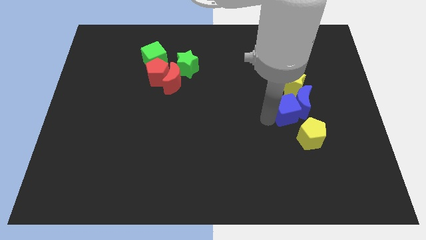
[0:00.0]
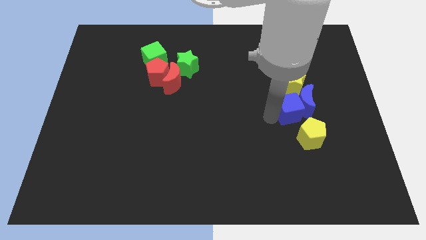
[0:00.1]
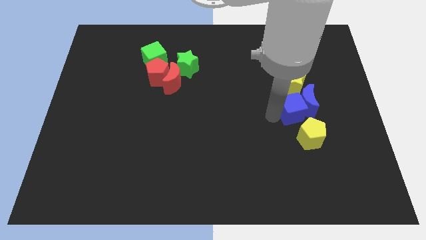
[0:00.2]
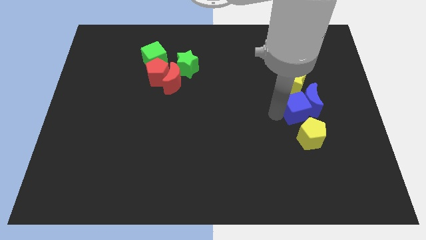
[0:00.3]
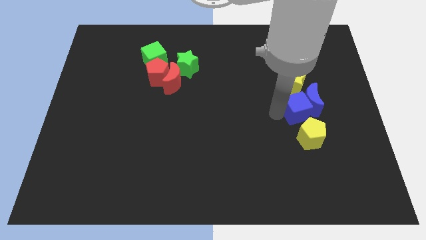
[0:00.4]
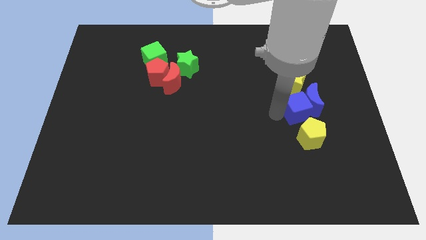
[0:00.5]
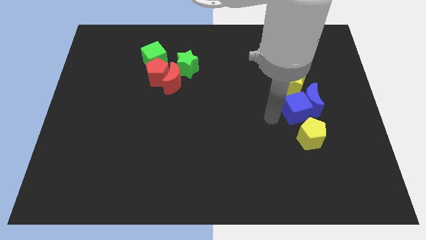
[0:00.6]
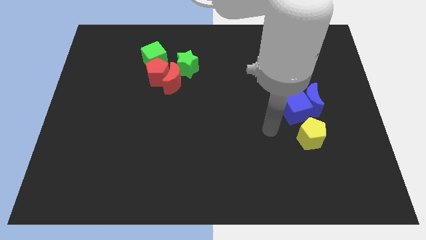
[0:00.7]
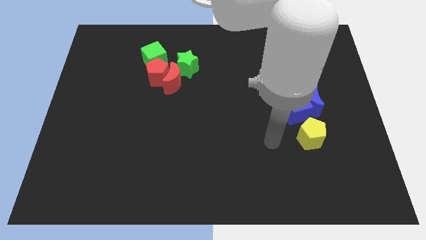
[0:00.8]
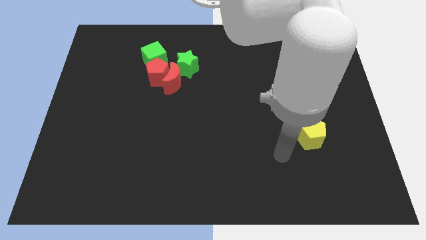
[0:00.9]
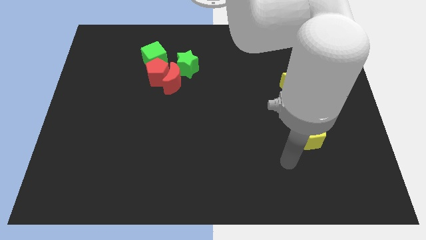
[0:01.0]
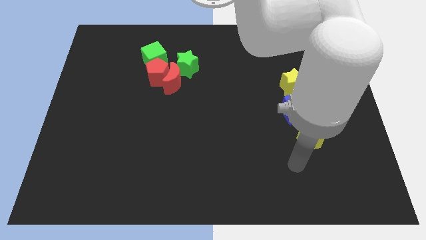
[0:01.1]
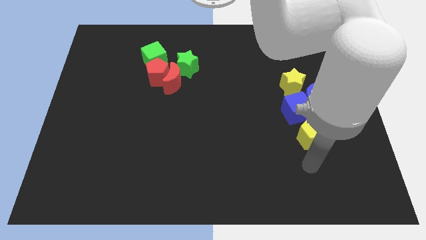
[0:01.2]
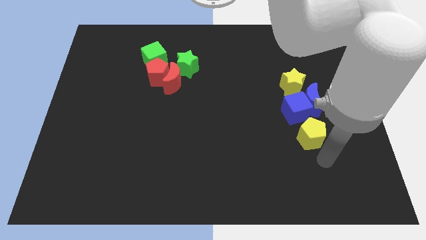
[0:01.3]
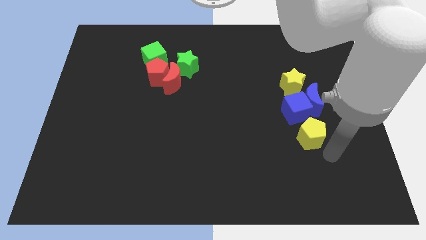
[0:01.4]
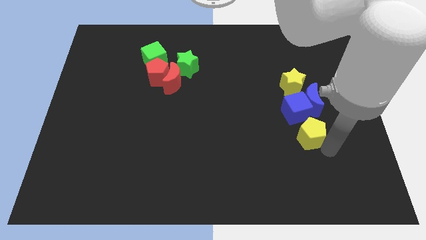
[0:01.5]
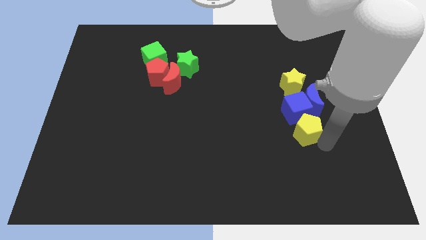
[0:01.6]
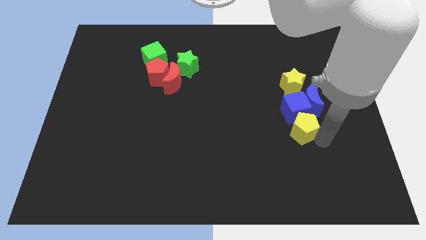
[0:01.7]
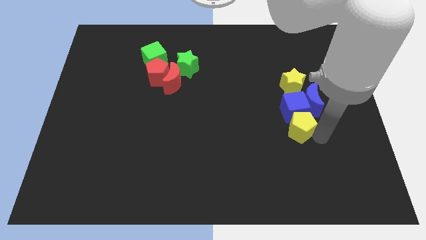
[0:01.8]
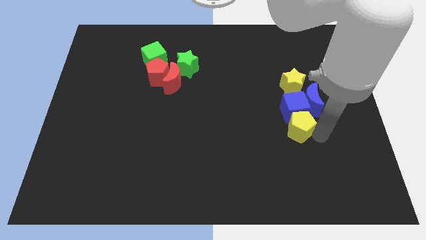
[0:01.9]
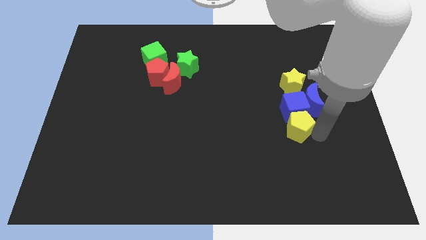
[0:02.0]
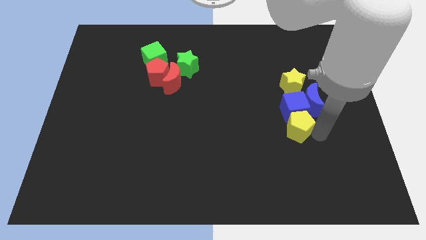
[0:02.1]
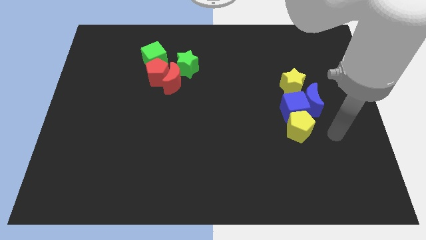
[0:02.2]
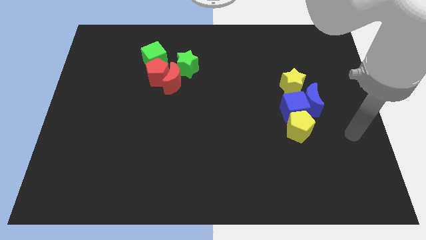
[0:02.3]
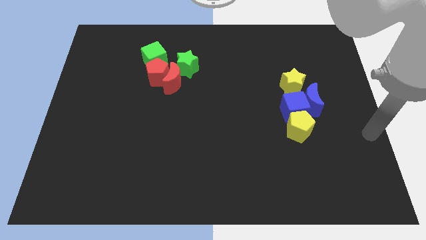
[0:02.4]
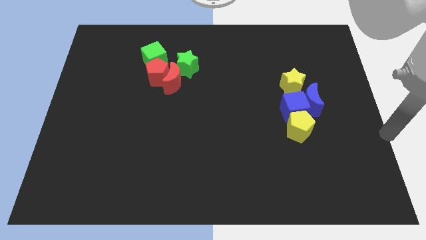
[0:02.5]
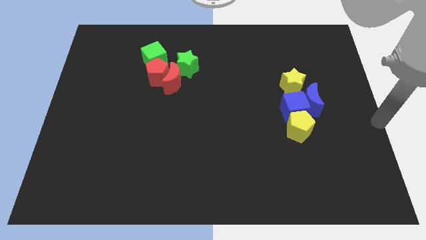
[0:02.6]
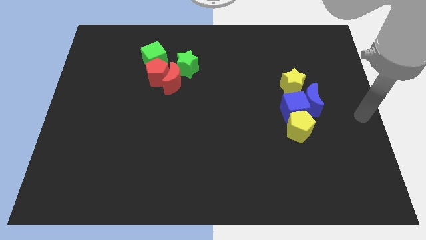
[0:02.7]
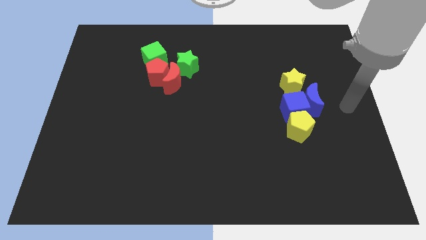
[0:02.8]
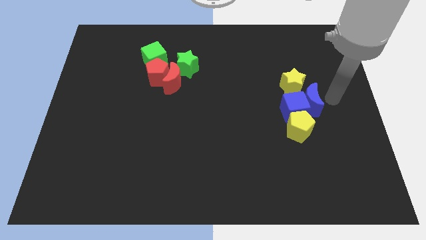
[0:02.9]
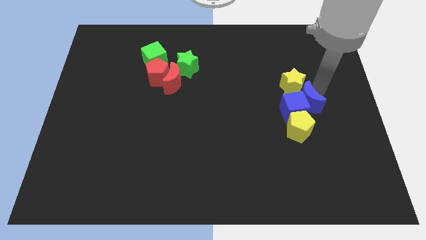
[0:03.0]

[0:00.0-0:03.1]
drag the yellow pentagon into the blue cube

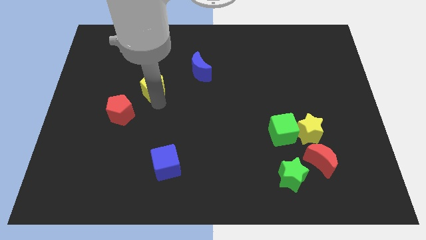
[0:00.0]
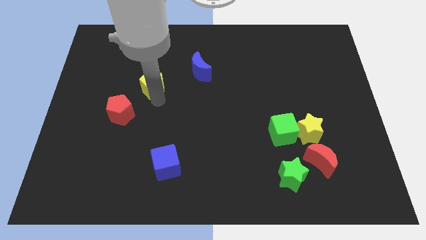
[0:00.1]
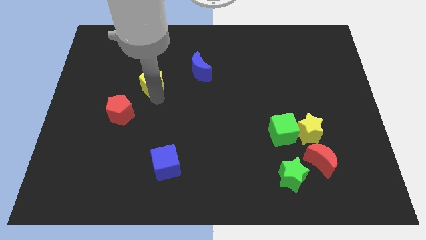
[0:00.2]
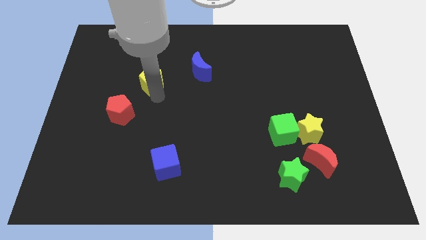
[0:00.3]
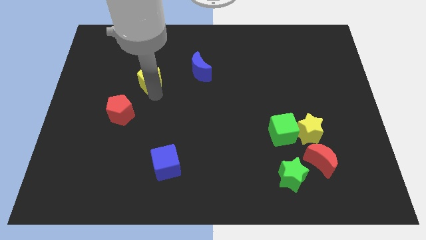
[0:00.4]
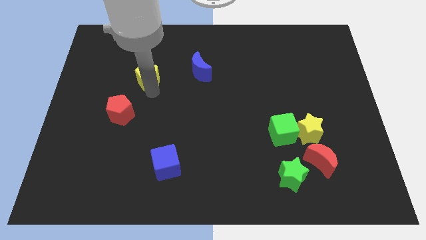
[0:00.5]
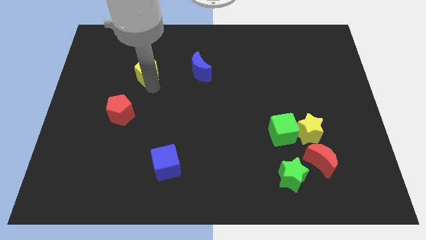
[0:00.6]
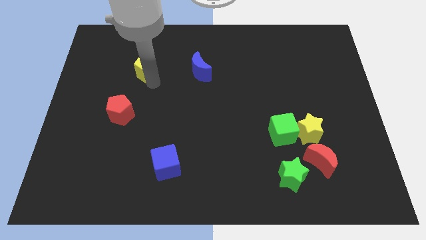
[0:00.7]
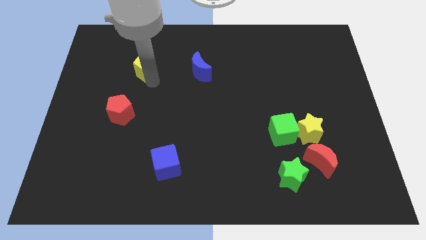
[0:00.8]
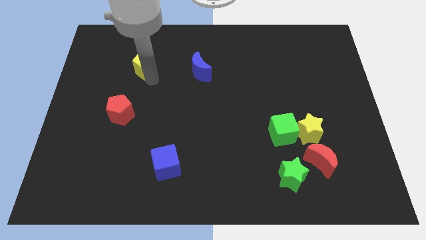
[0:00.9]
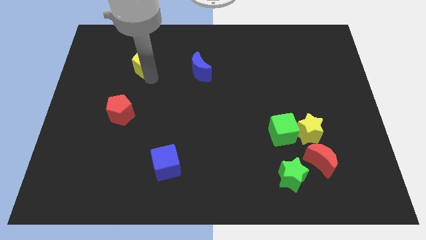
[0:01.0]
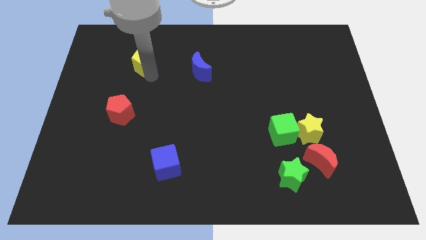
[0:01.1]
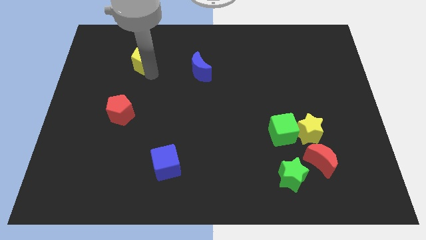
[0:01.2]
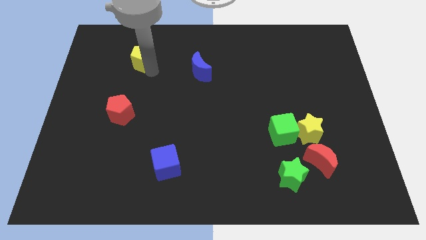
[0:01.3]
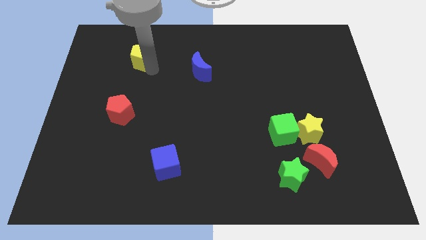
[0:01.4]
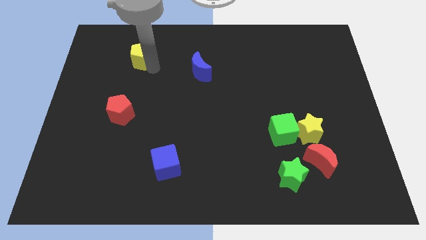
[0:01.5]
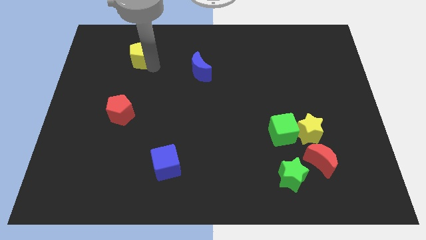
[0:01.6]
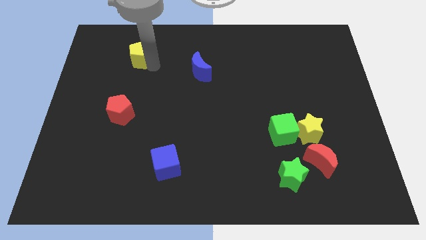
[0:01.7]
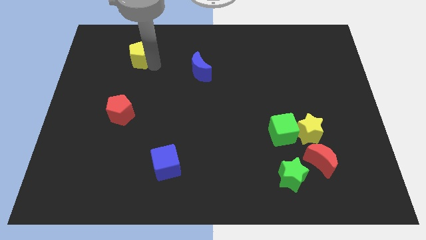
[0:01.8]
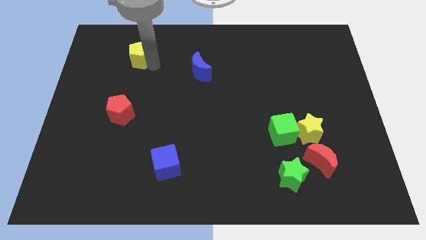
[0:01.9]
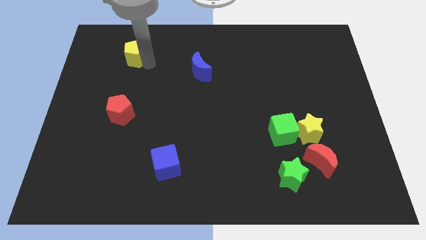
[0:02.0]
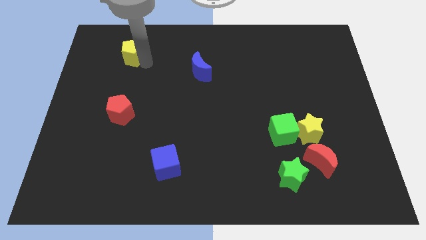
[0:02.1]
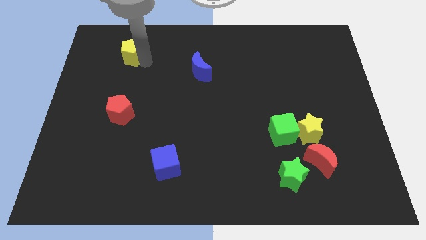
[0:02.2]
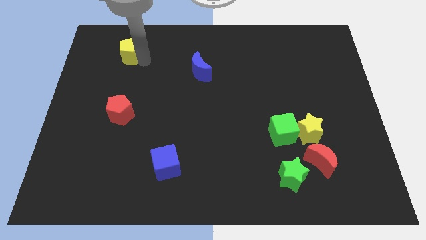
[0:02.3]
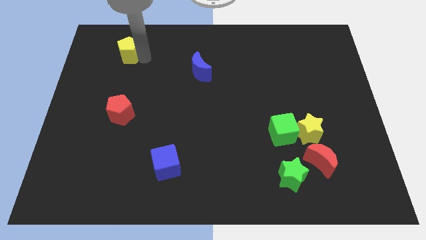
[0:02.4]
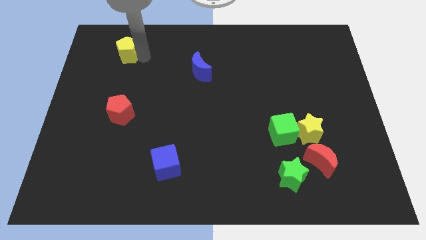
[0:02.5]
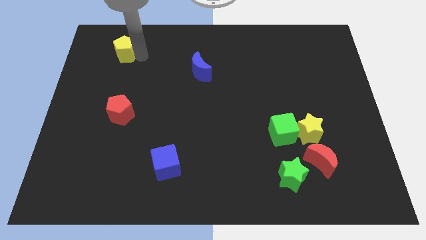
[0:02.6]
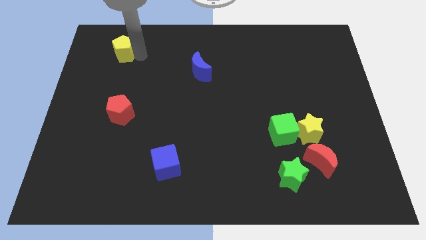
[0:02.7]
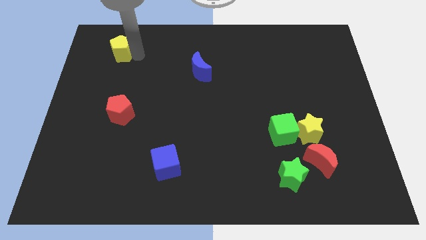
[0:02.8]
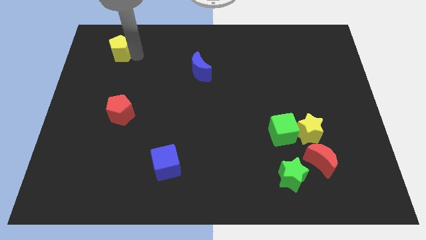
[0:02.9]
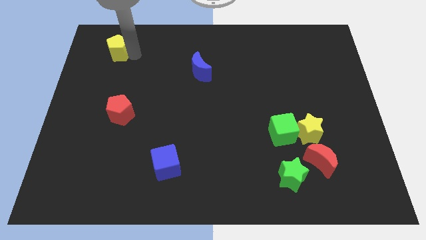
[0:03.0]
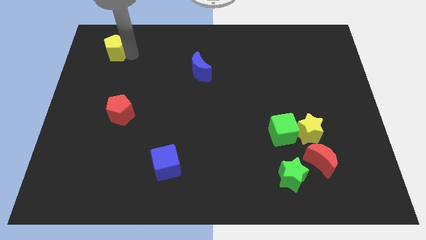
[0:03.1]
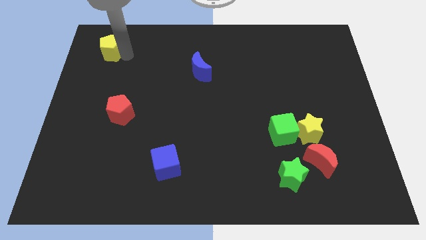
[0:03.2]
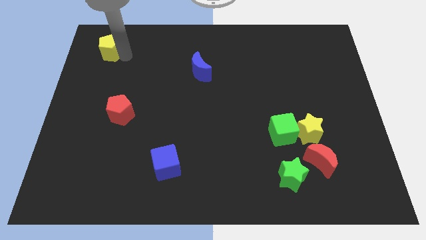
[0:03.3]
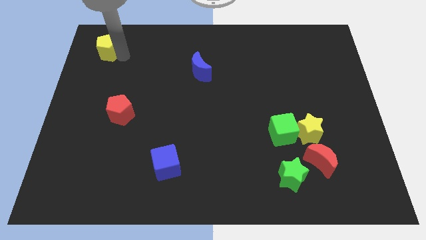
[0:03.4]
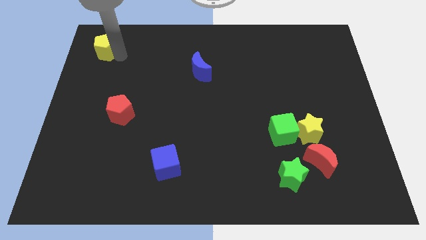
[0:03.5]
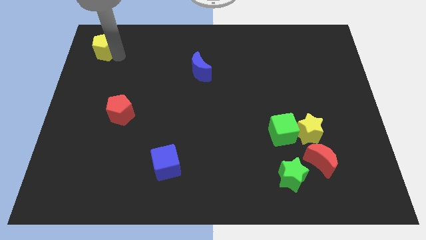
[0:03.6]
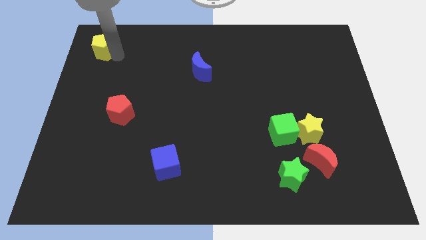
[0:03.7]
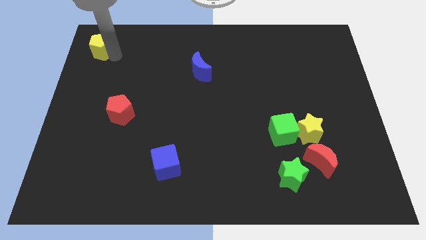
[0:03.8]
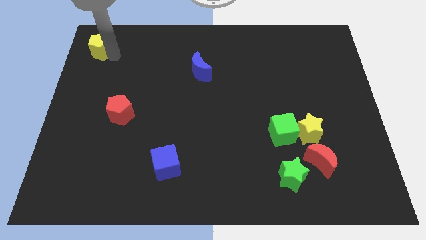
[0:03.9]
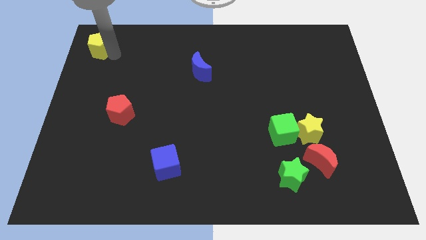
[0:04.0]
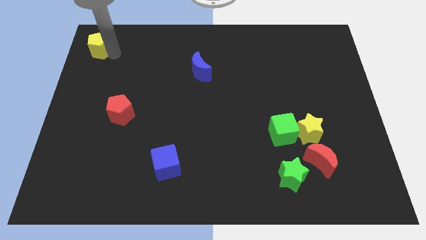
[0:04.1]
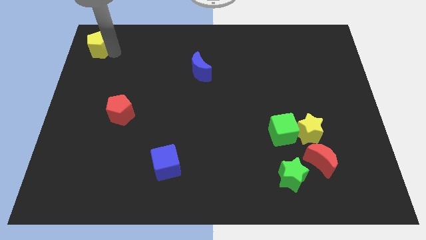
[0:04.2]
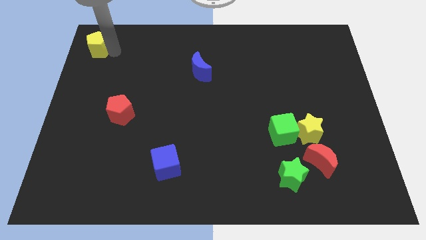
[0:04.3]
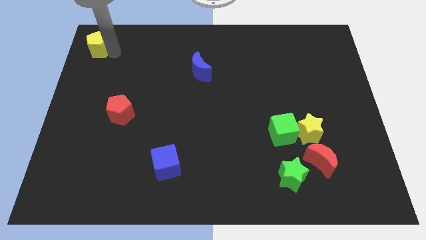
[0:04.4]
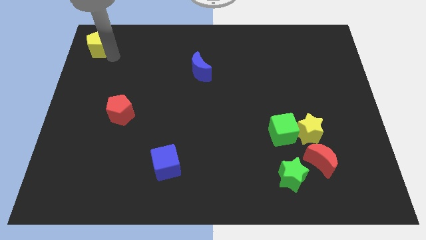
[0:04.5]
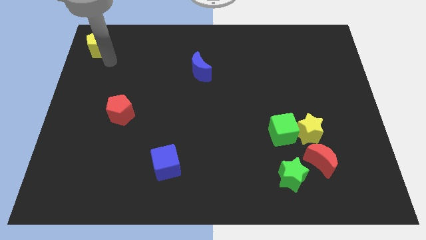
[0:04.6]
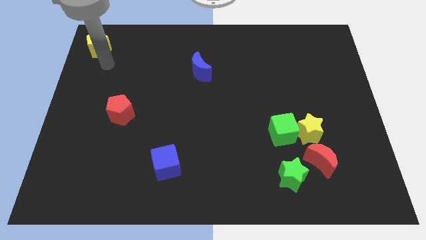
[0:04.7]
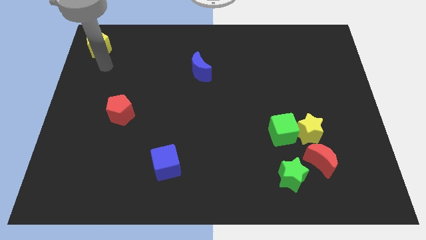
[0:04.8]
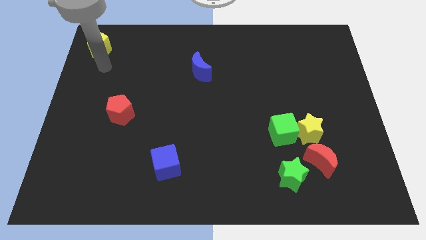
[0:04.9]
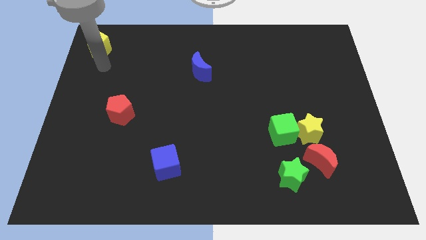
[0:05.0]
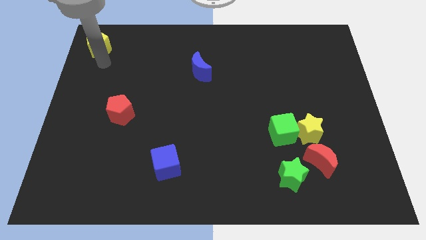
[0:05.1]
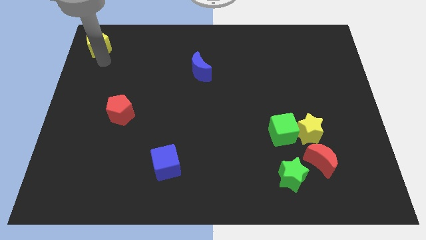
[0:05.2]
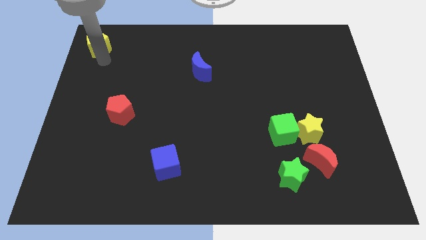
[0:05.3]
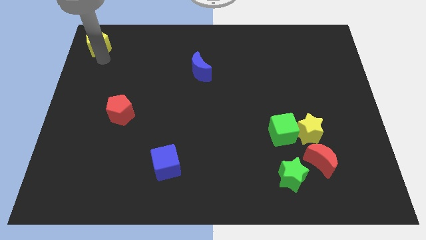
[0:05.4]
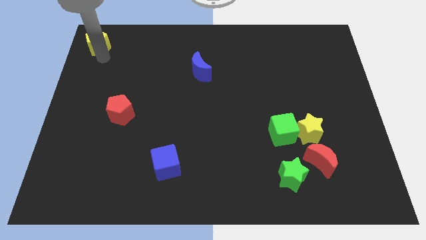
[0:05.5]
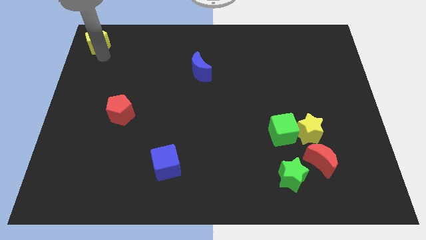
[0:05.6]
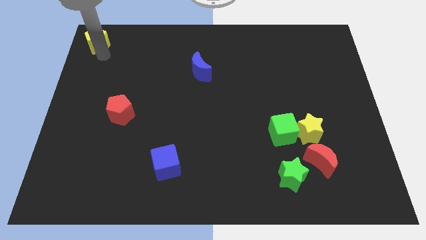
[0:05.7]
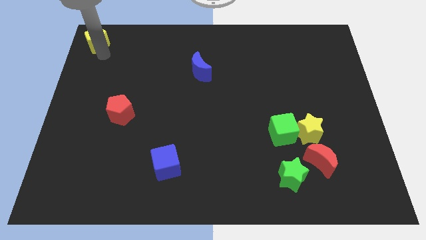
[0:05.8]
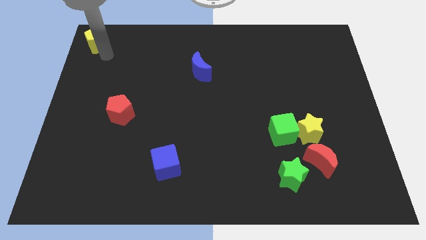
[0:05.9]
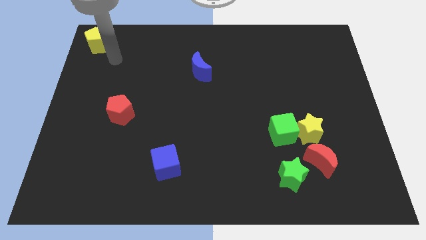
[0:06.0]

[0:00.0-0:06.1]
push the yellow pentagon to the top left corner
